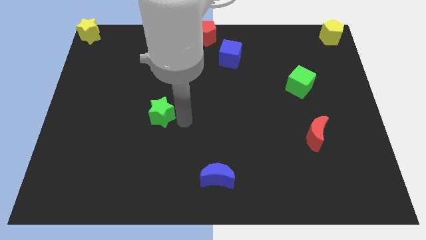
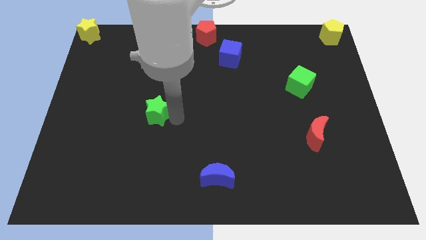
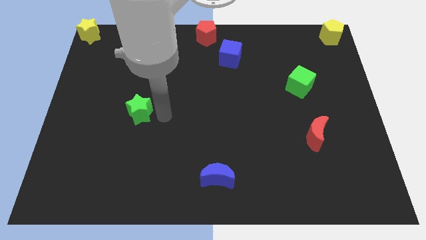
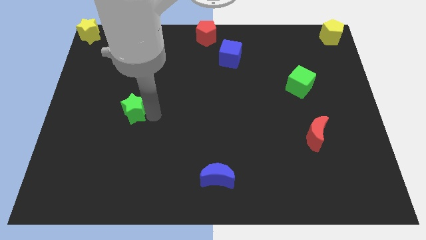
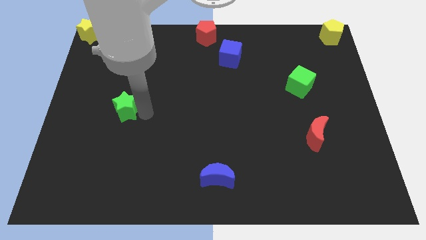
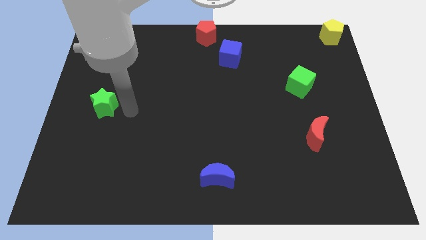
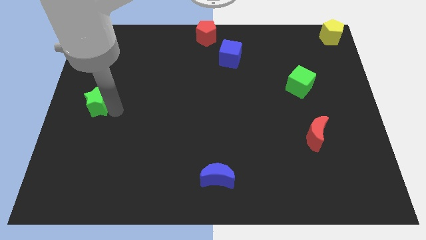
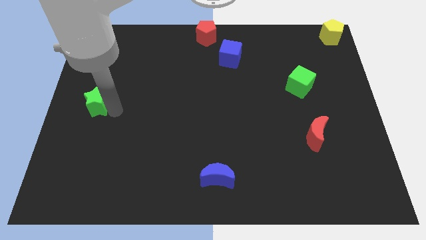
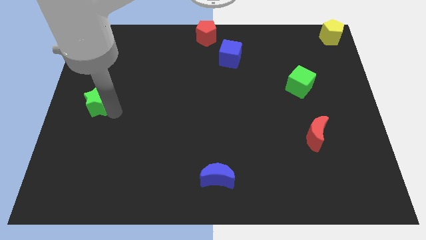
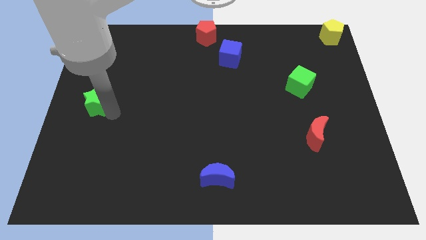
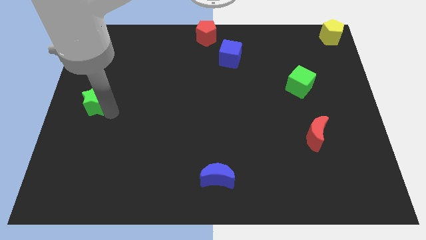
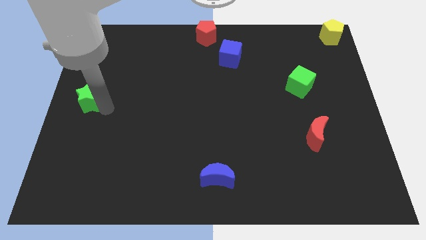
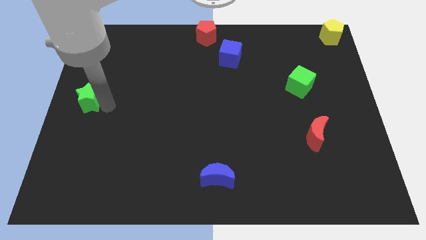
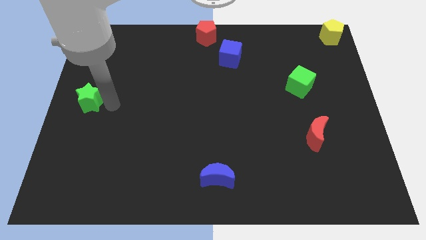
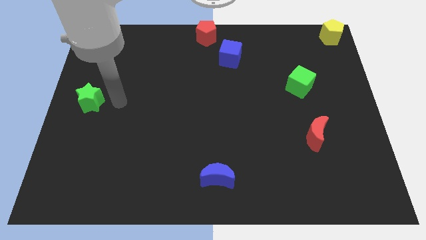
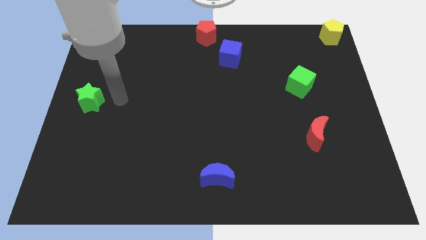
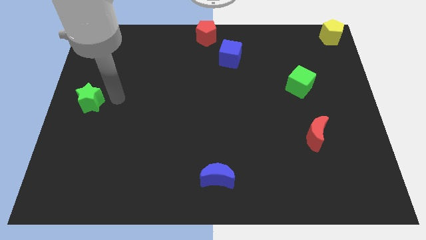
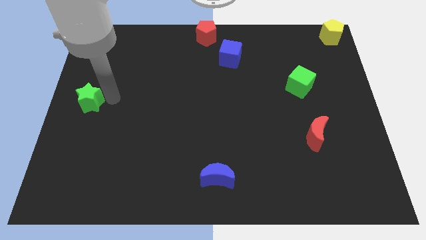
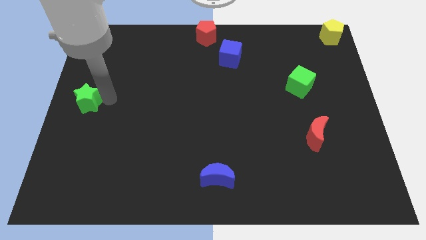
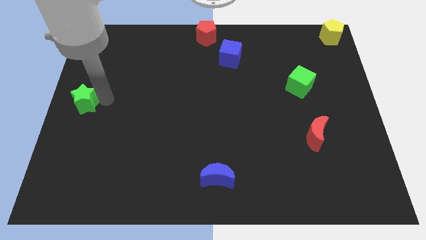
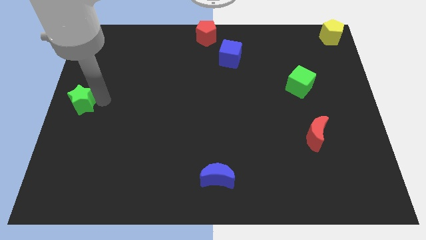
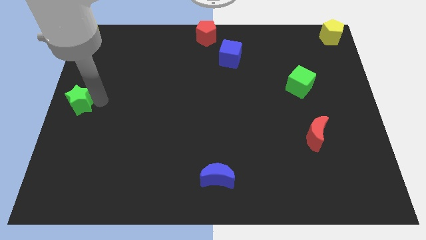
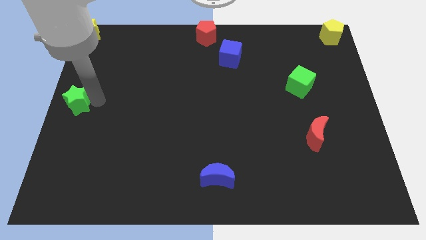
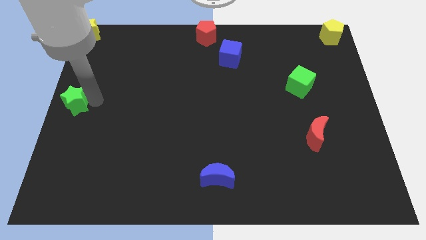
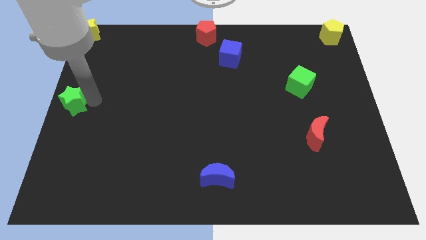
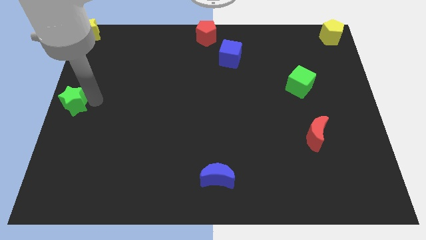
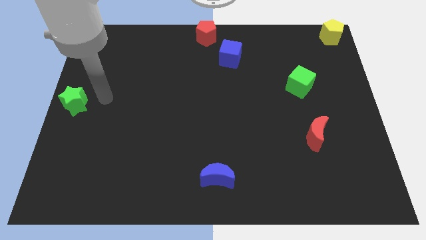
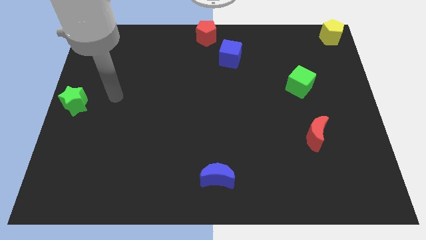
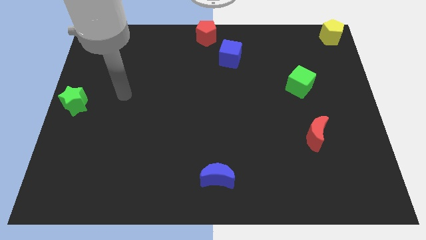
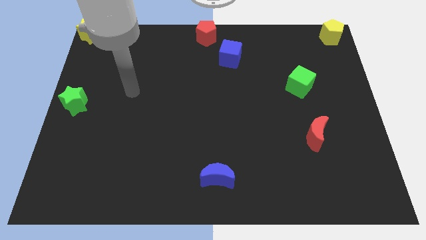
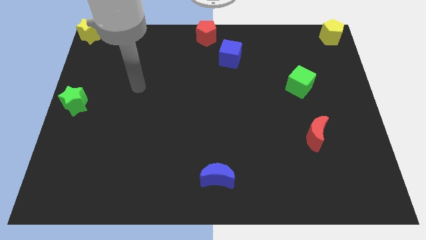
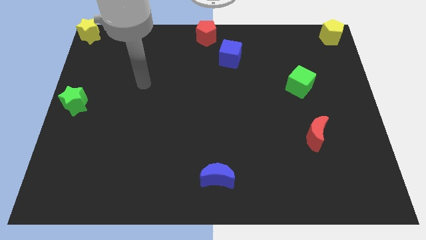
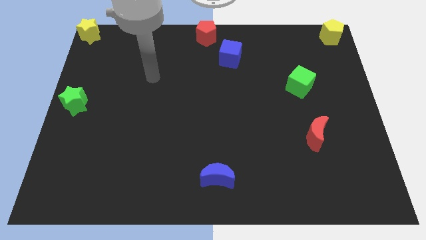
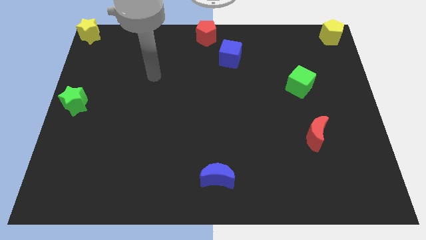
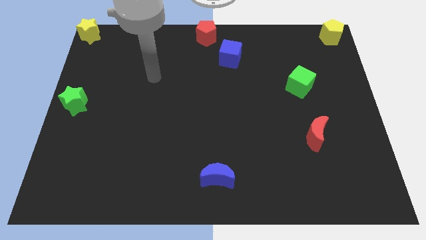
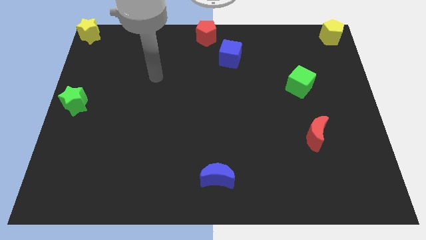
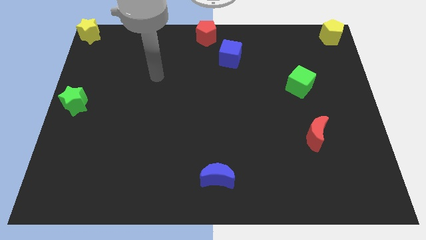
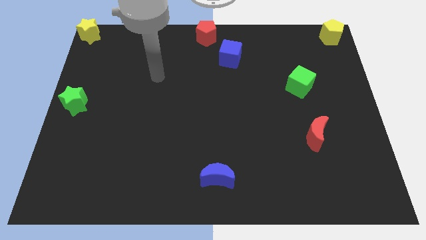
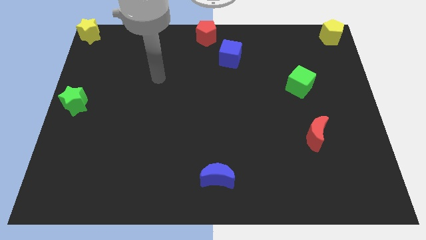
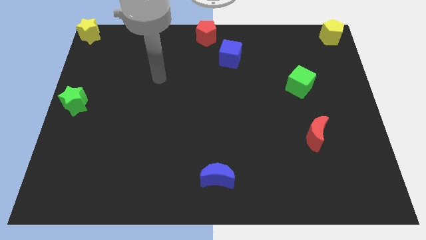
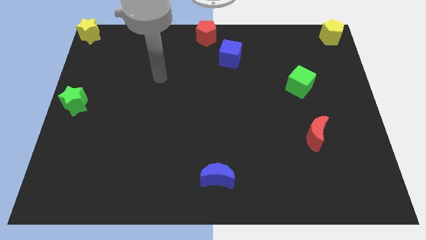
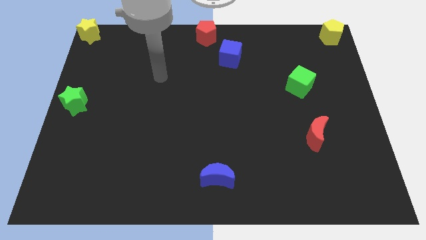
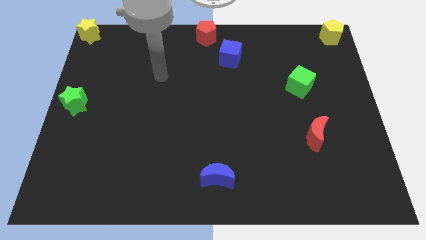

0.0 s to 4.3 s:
drag the green star to the left side of the board

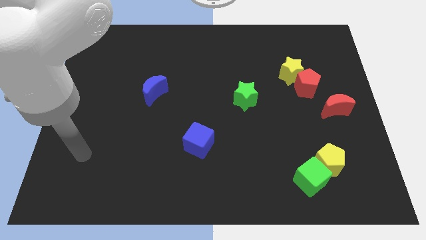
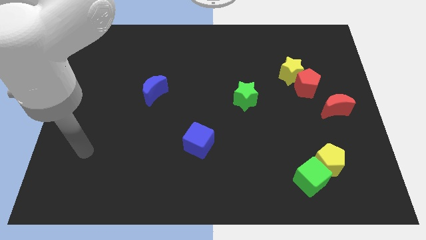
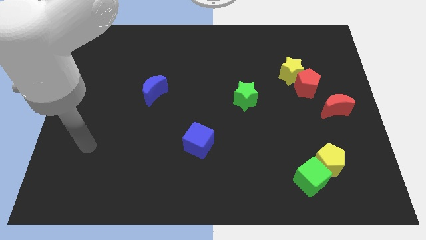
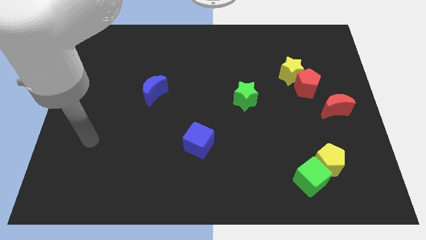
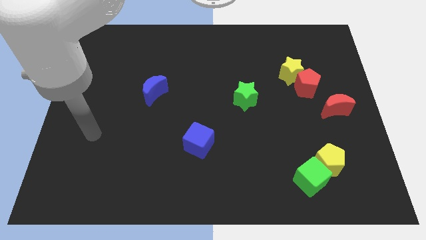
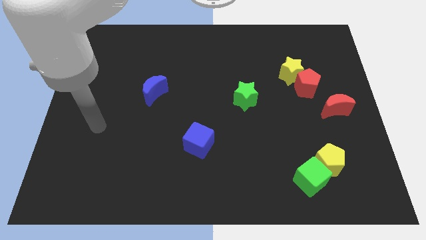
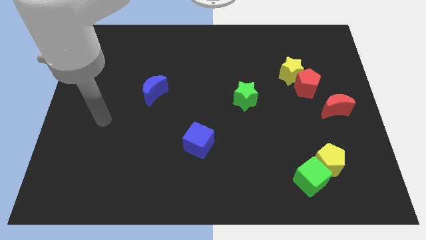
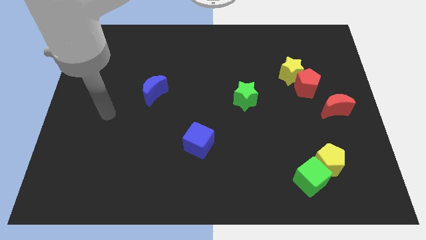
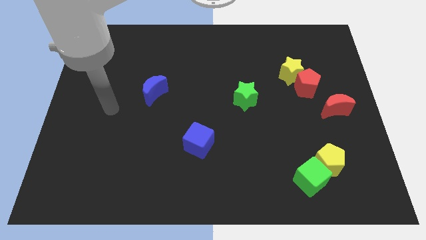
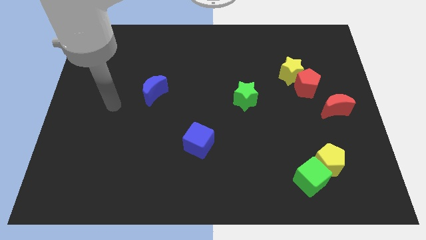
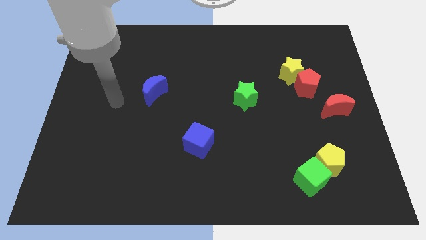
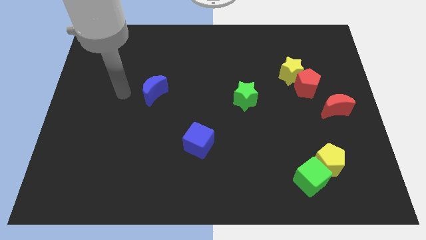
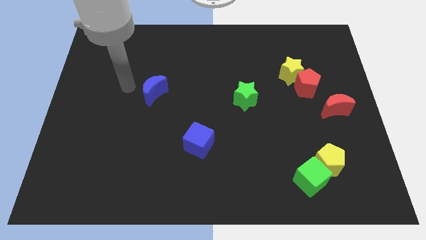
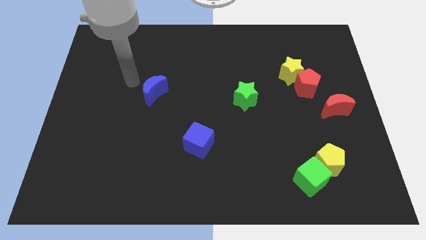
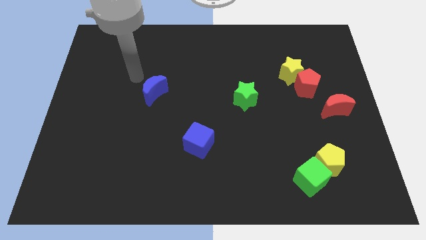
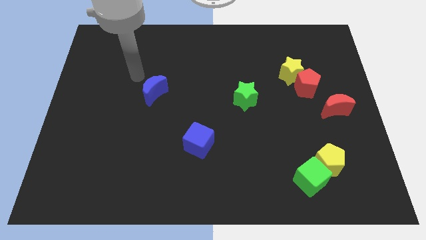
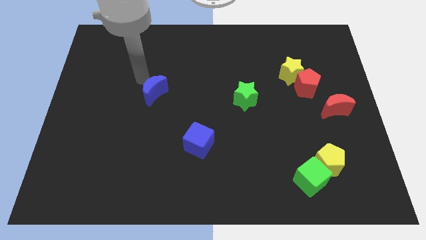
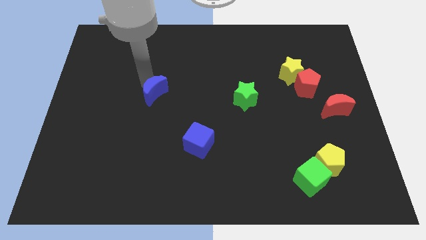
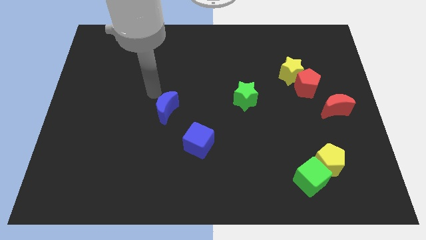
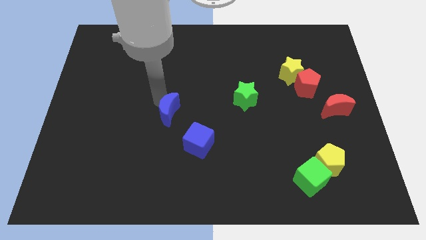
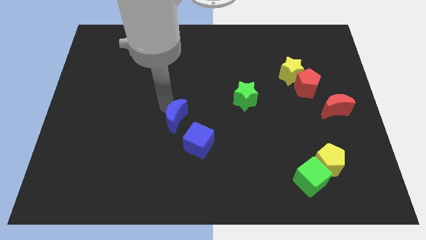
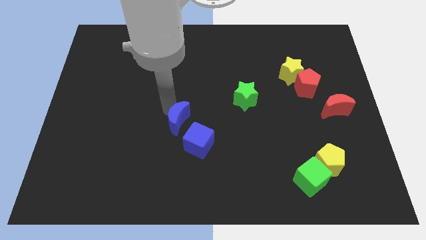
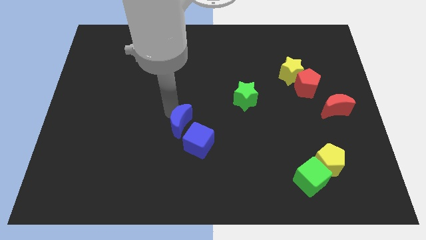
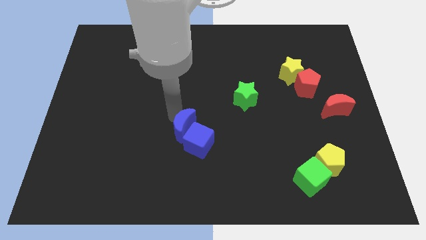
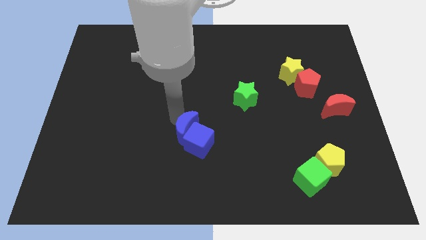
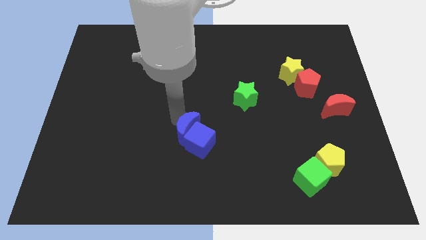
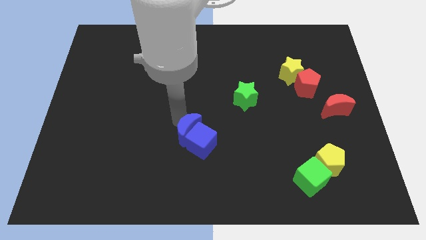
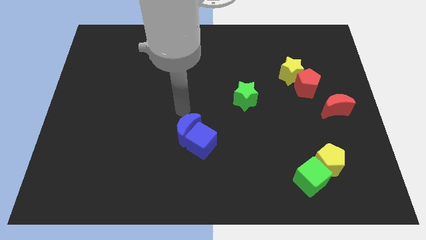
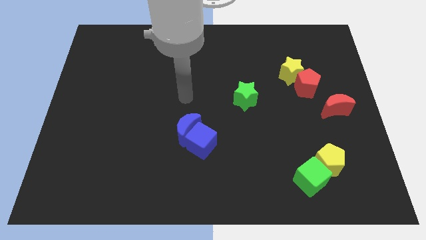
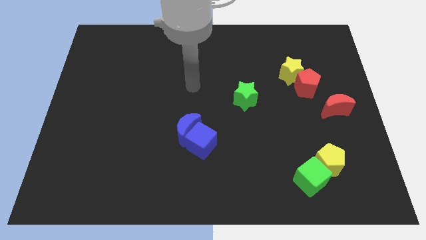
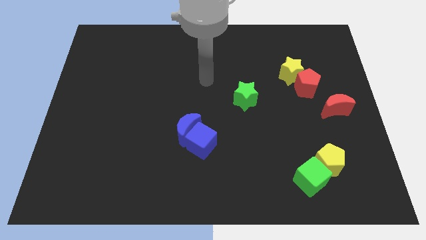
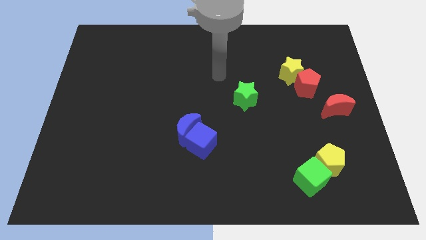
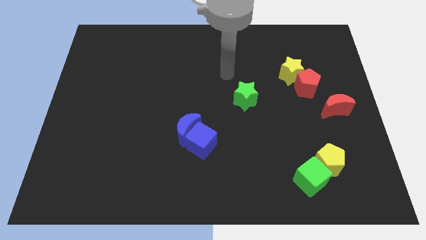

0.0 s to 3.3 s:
move blue moon into blue cube

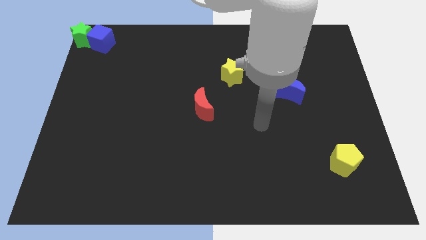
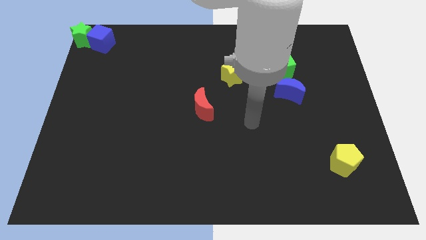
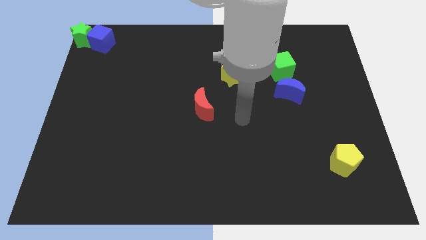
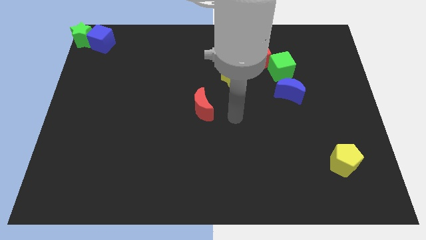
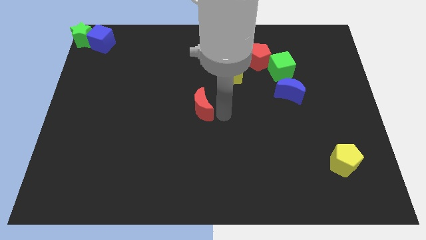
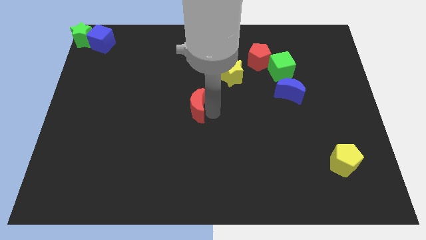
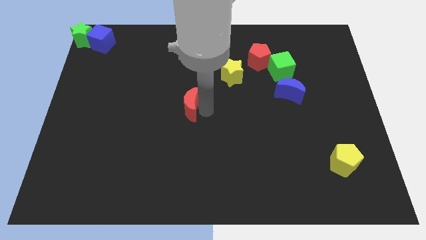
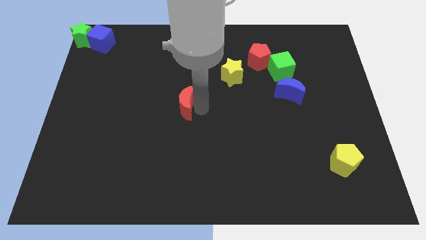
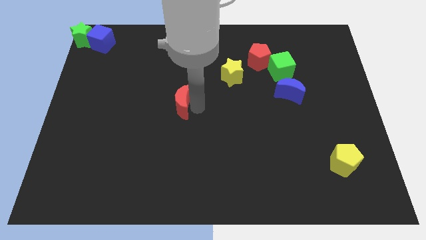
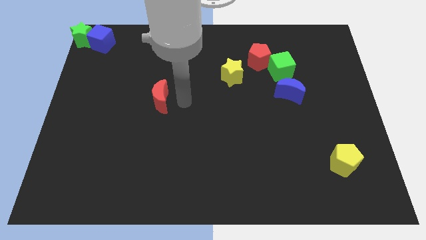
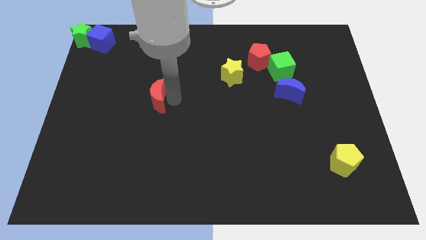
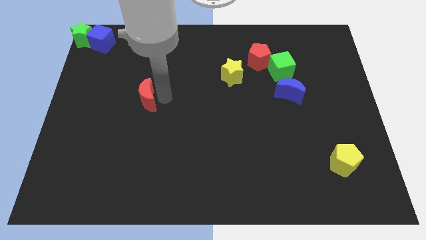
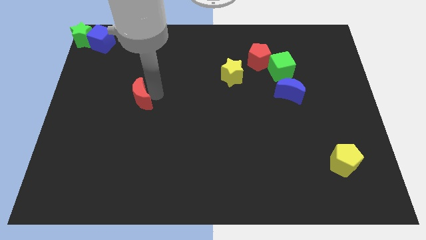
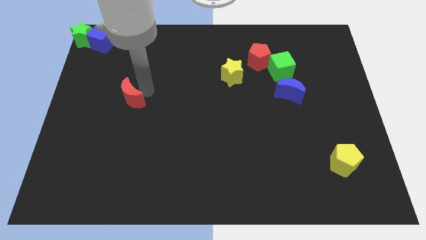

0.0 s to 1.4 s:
move the red crescent to the left of the board

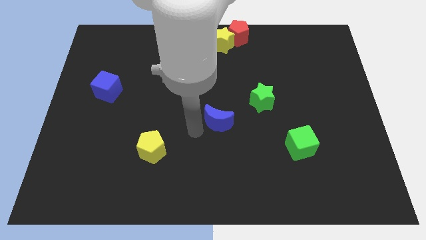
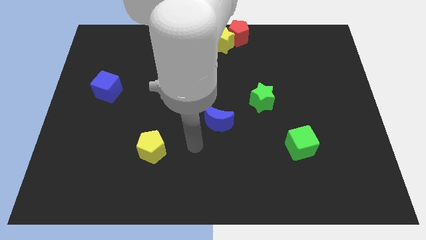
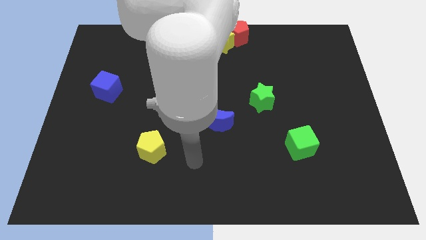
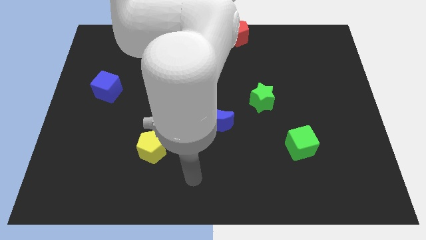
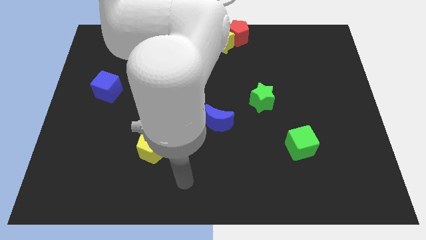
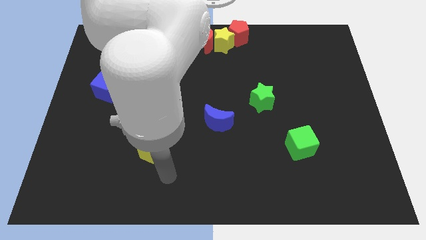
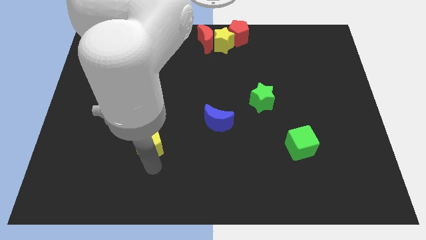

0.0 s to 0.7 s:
move your arm below the yellow pentagon
